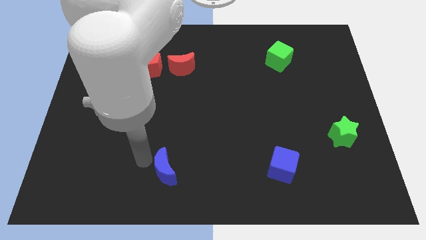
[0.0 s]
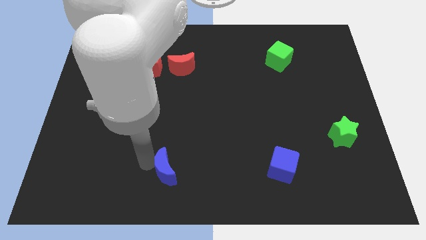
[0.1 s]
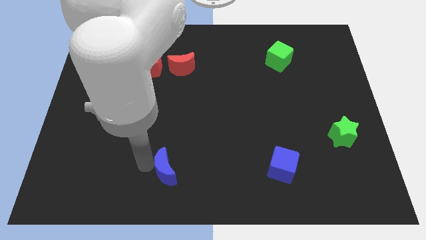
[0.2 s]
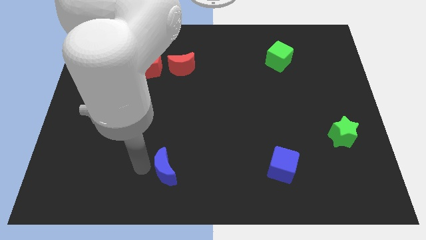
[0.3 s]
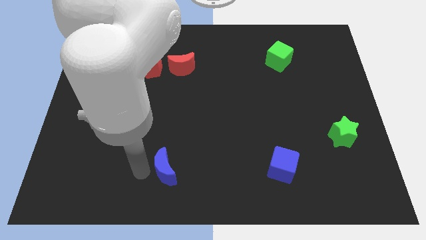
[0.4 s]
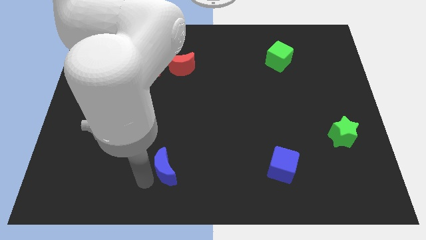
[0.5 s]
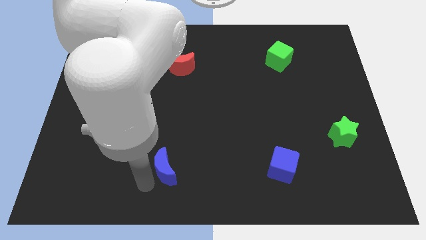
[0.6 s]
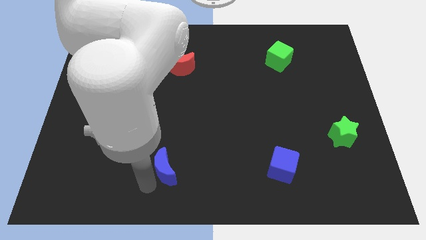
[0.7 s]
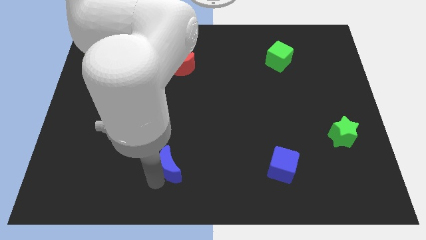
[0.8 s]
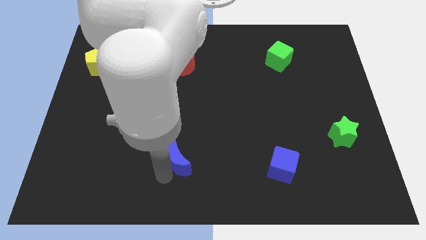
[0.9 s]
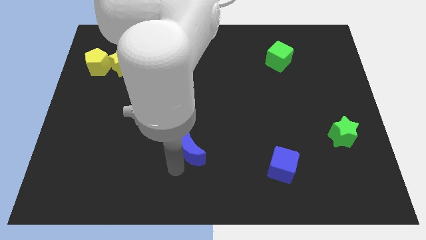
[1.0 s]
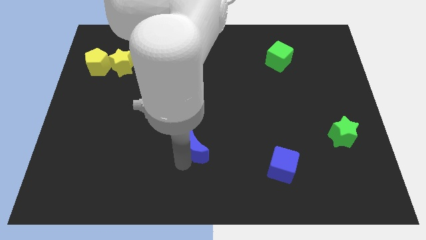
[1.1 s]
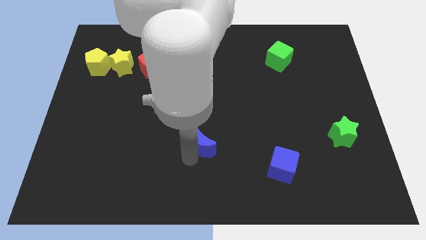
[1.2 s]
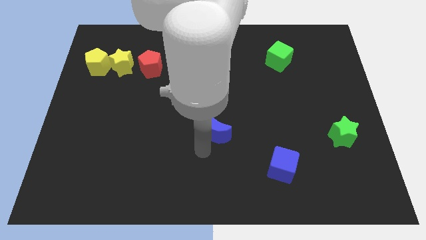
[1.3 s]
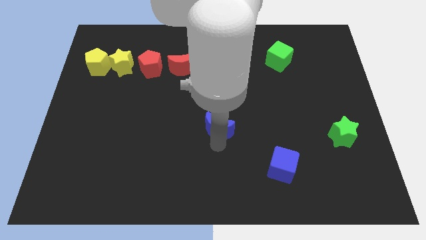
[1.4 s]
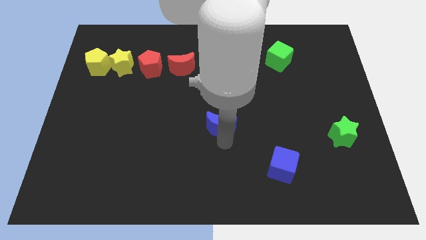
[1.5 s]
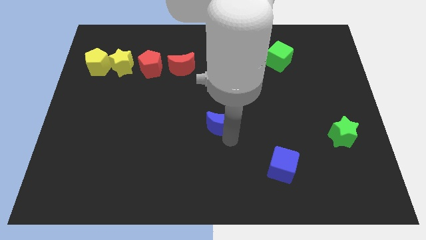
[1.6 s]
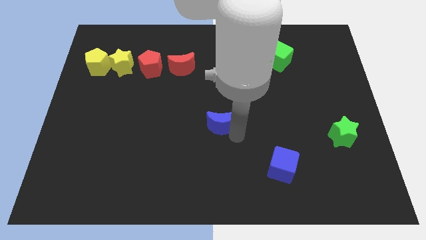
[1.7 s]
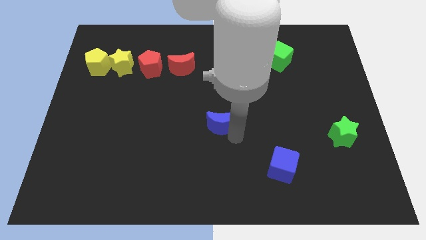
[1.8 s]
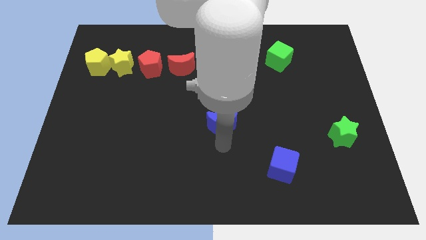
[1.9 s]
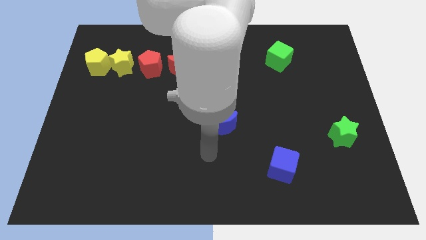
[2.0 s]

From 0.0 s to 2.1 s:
push the blue moon up towards the center of the board

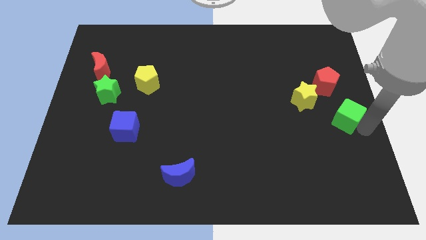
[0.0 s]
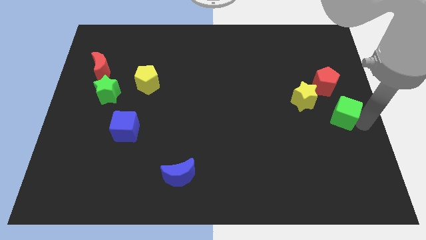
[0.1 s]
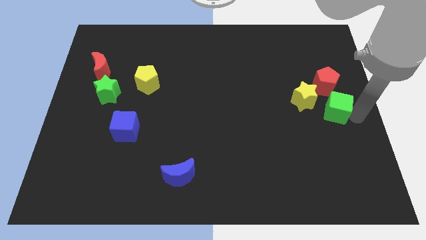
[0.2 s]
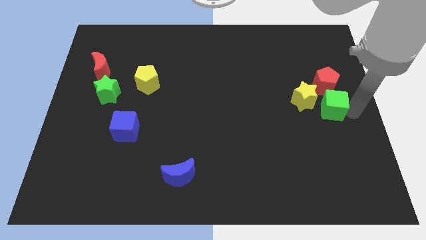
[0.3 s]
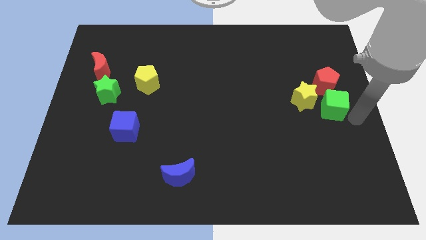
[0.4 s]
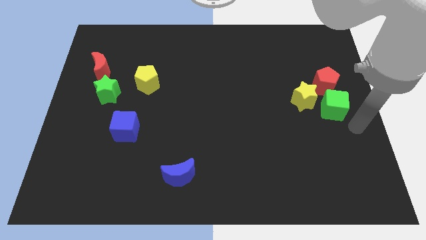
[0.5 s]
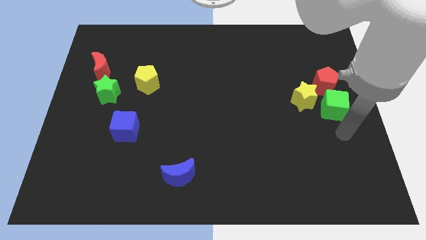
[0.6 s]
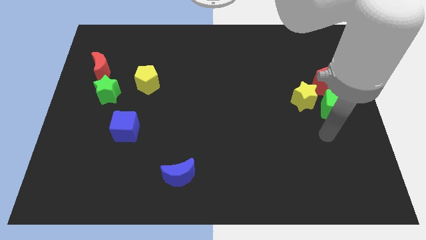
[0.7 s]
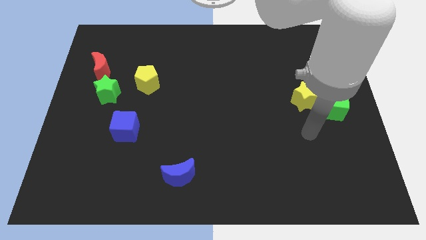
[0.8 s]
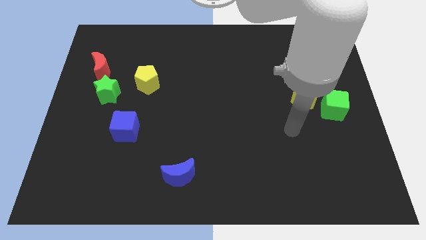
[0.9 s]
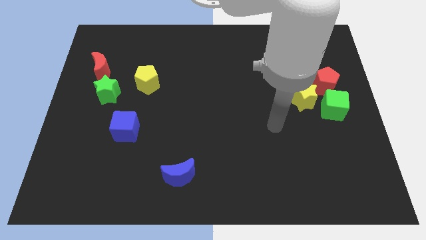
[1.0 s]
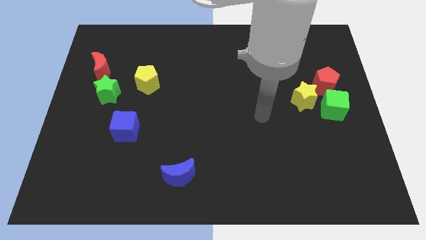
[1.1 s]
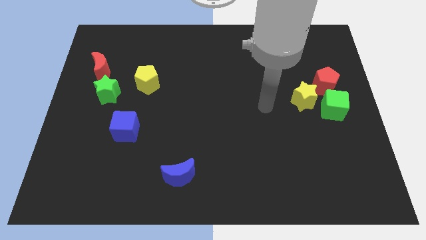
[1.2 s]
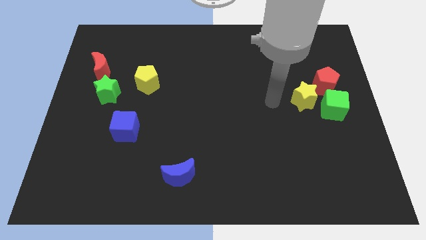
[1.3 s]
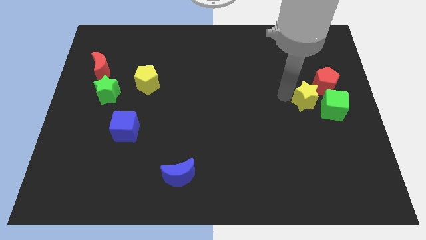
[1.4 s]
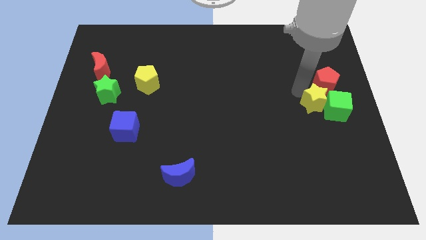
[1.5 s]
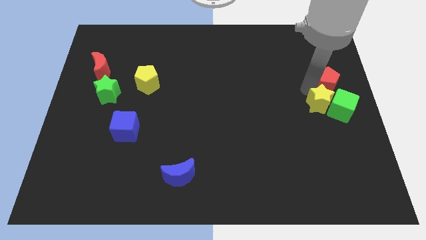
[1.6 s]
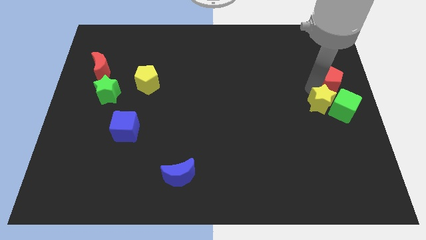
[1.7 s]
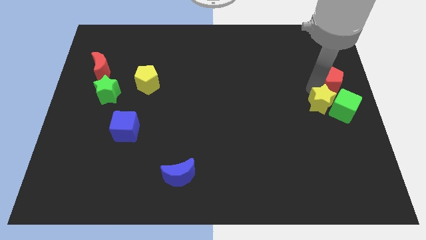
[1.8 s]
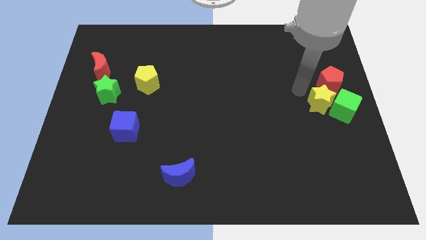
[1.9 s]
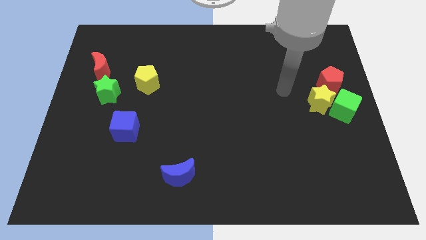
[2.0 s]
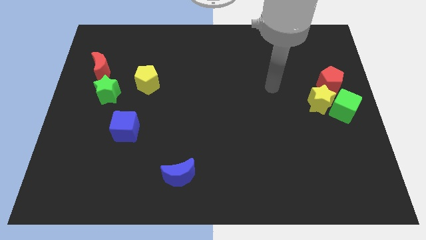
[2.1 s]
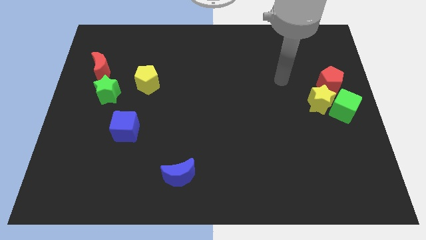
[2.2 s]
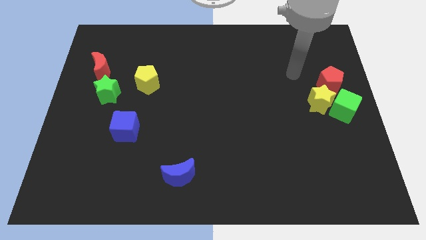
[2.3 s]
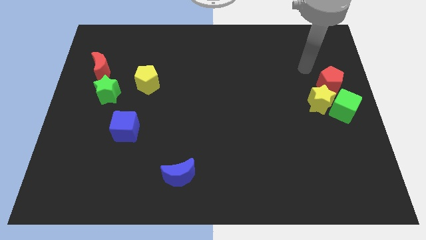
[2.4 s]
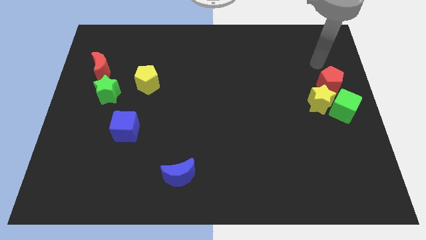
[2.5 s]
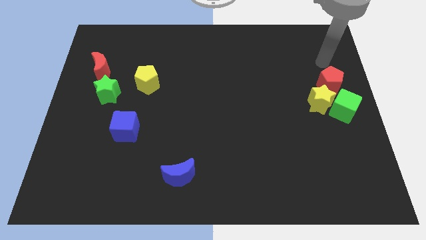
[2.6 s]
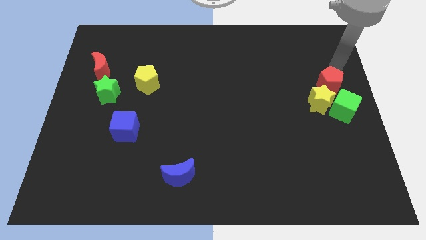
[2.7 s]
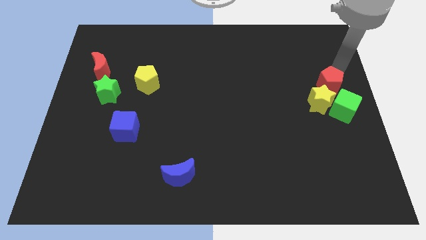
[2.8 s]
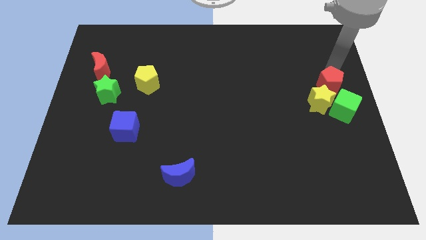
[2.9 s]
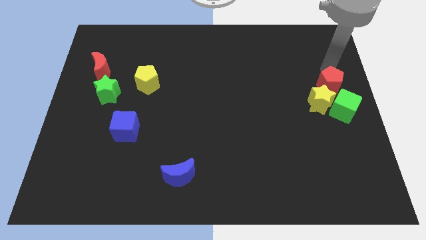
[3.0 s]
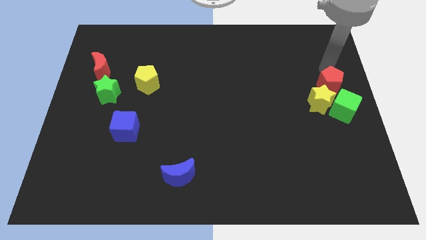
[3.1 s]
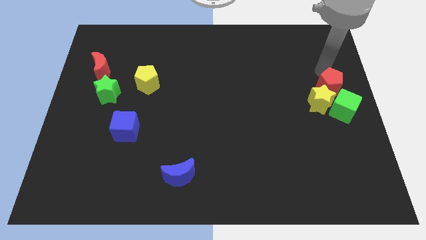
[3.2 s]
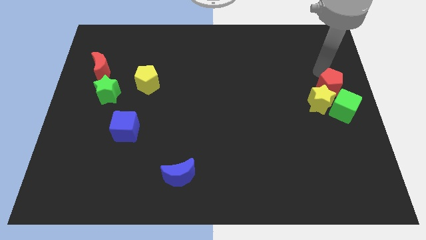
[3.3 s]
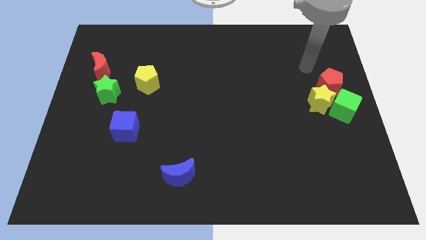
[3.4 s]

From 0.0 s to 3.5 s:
push the yellow star into the green cube

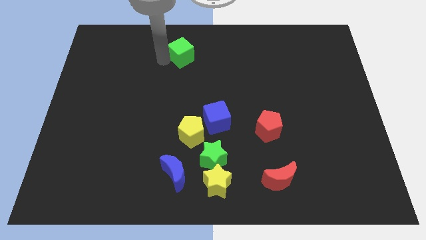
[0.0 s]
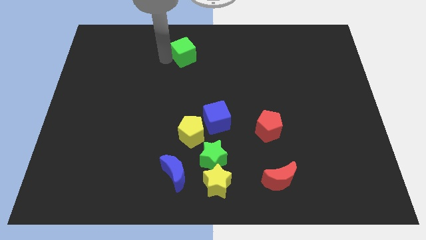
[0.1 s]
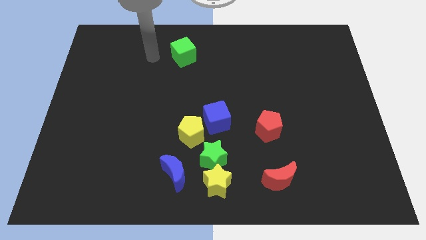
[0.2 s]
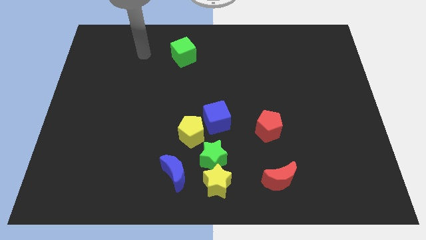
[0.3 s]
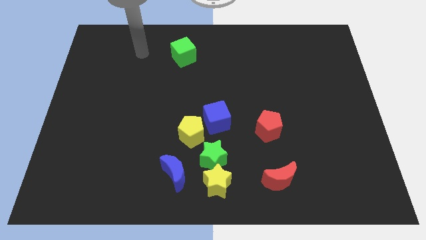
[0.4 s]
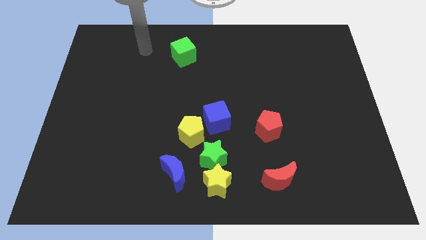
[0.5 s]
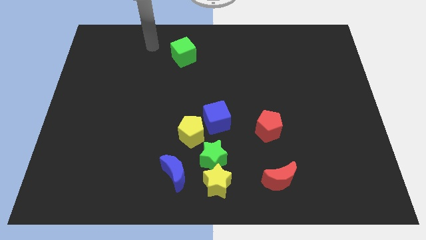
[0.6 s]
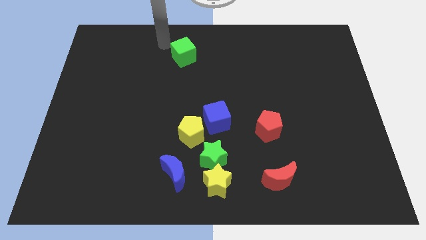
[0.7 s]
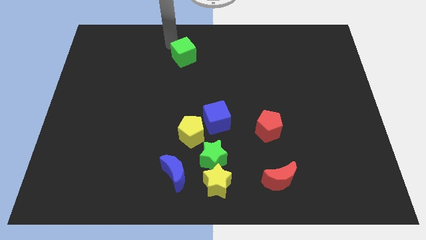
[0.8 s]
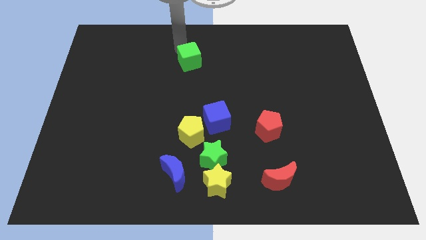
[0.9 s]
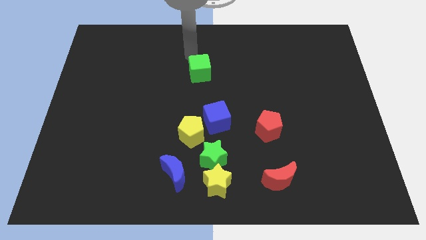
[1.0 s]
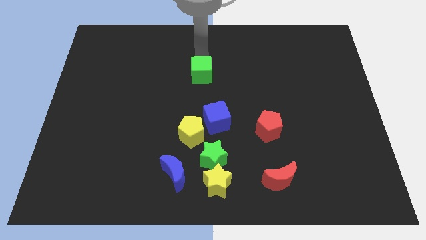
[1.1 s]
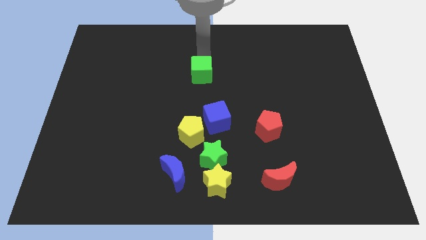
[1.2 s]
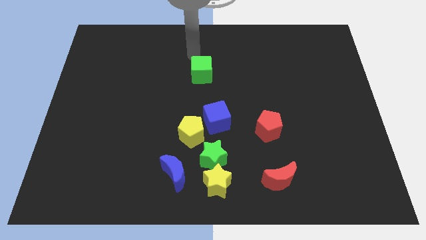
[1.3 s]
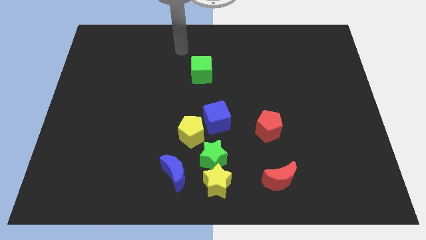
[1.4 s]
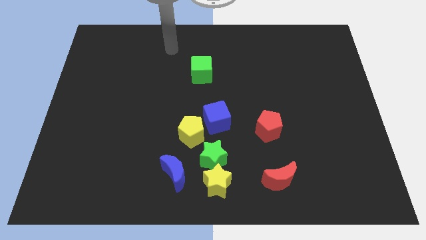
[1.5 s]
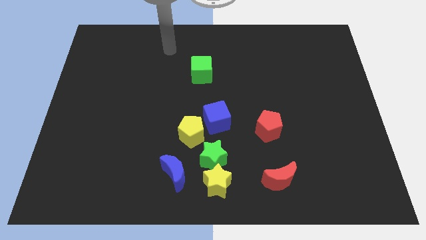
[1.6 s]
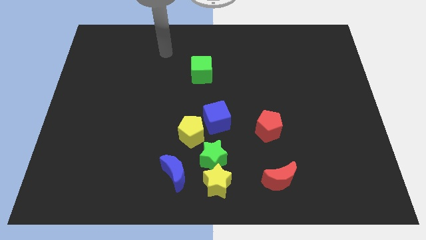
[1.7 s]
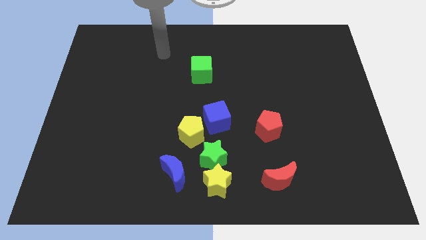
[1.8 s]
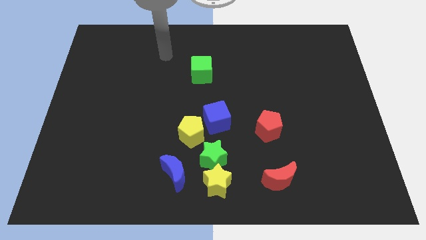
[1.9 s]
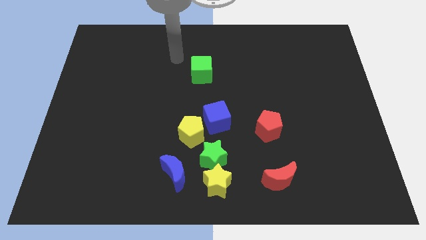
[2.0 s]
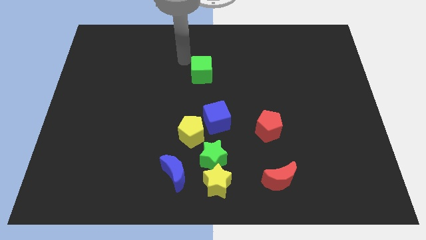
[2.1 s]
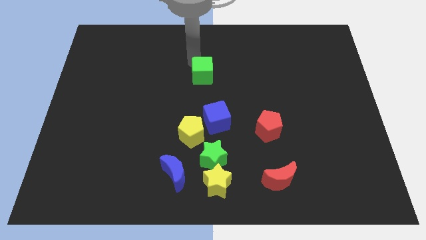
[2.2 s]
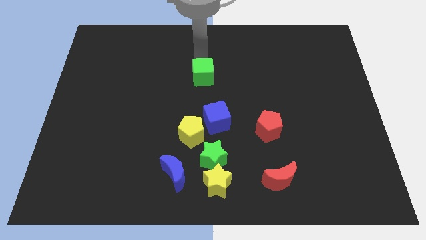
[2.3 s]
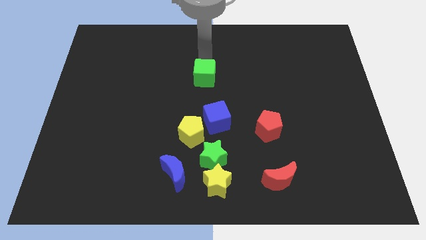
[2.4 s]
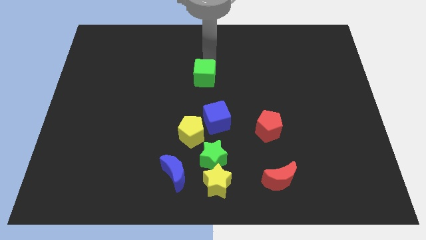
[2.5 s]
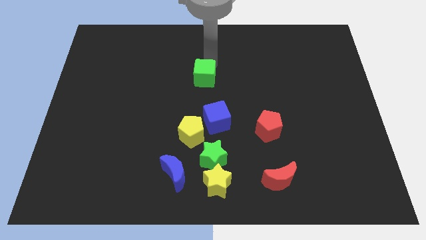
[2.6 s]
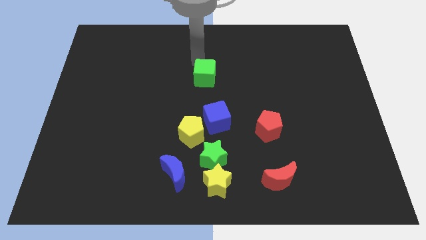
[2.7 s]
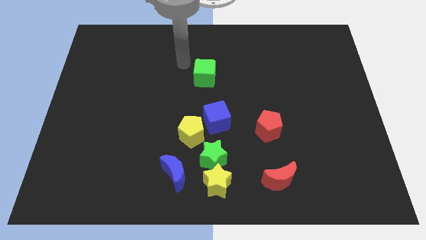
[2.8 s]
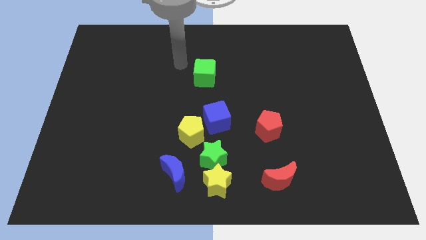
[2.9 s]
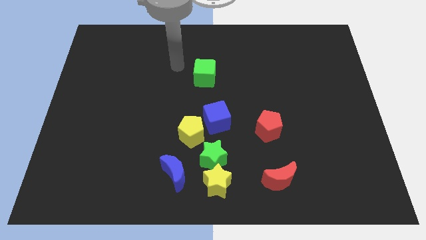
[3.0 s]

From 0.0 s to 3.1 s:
move the green cube to the top side of the blue cube

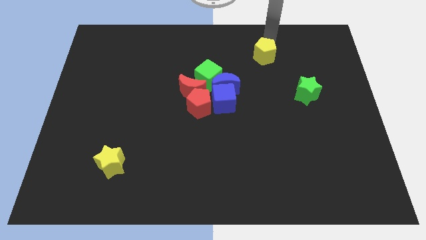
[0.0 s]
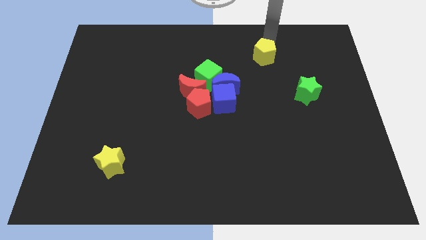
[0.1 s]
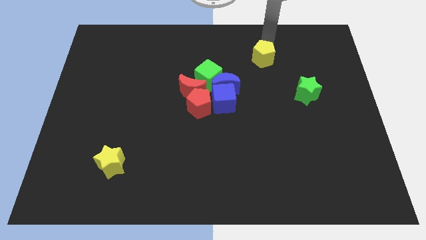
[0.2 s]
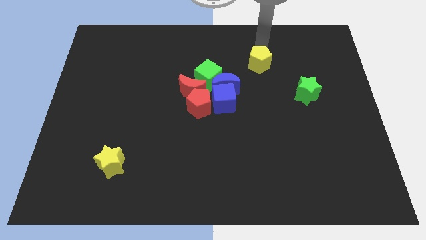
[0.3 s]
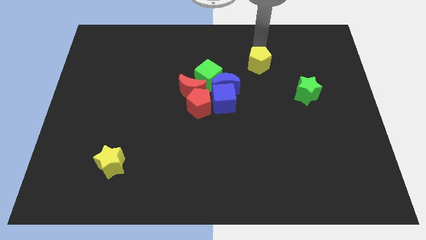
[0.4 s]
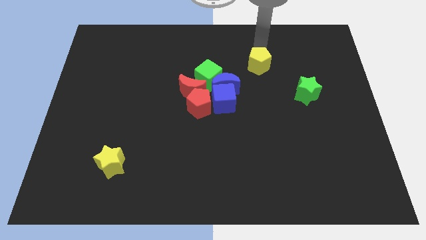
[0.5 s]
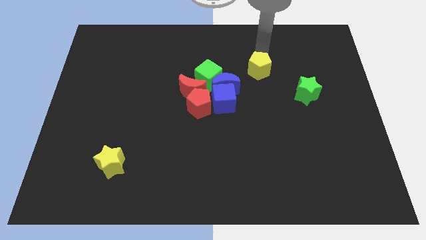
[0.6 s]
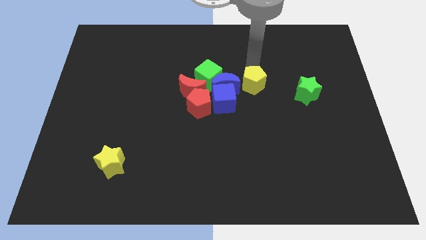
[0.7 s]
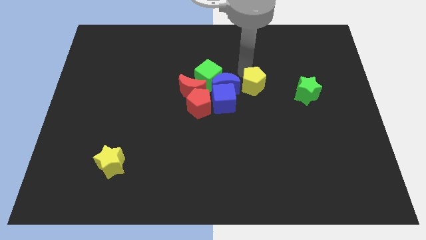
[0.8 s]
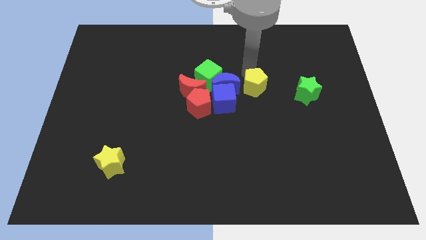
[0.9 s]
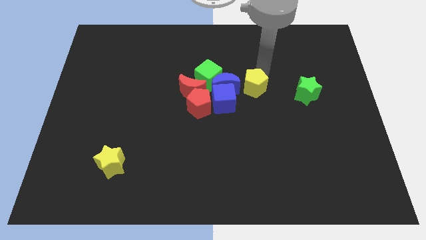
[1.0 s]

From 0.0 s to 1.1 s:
place yellow pentagon beside blue crescent
